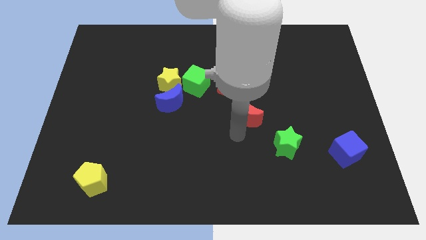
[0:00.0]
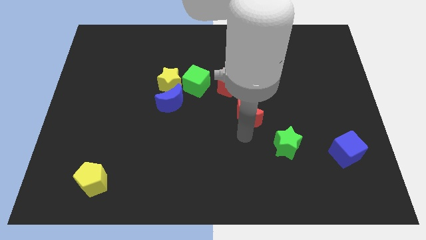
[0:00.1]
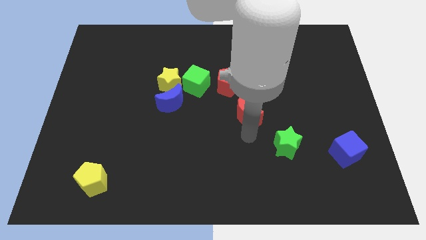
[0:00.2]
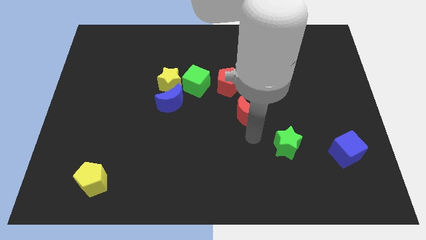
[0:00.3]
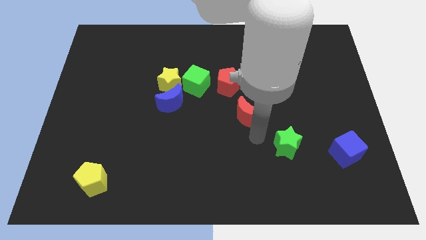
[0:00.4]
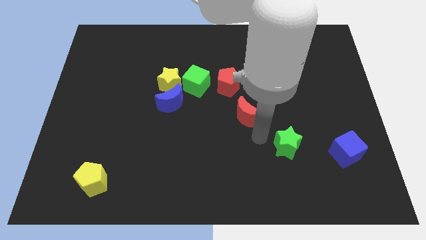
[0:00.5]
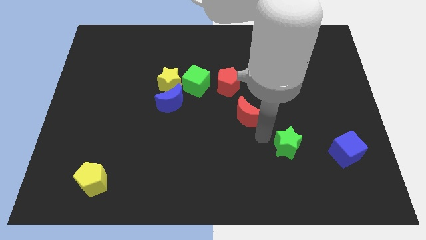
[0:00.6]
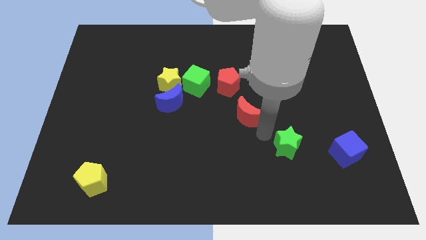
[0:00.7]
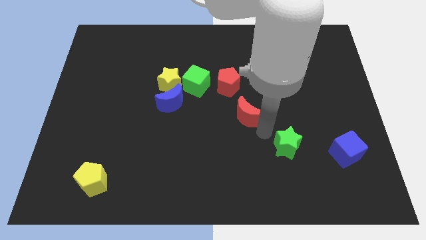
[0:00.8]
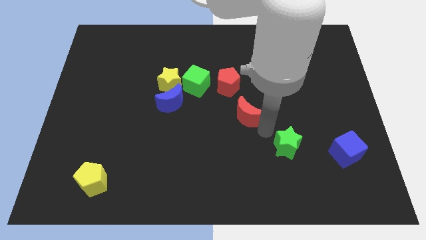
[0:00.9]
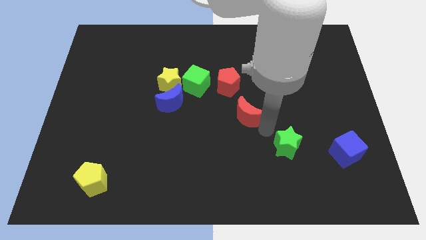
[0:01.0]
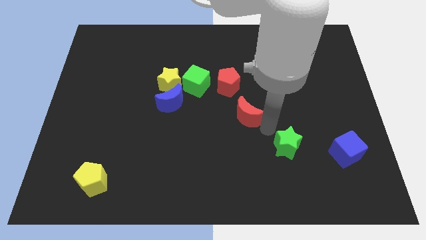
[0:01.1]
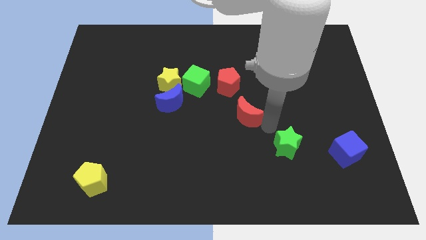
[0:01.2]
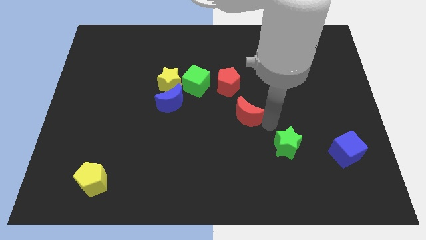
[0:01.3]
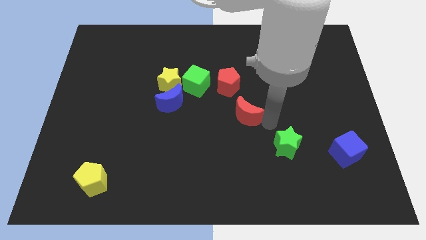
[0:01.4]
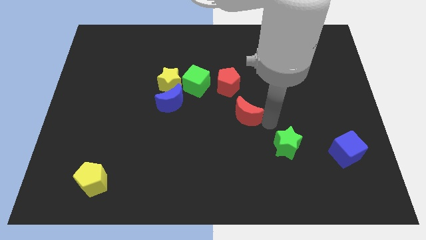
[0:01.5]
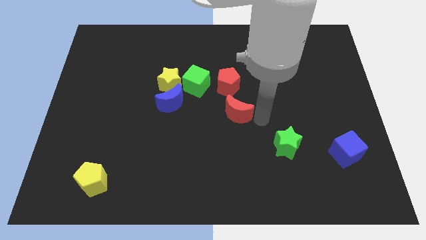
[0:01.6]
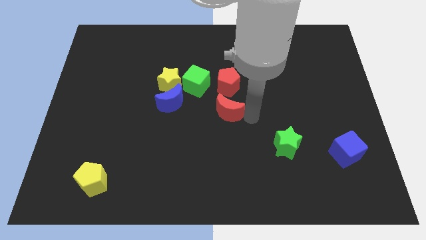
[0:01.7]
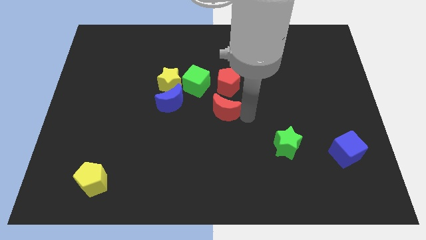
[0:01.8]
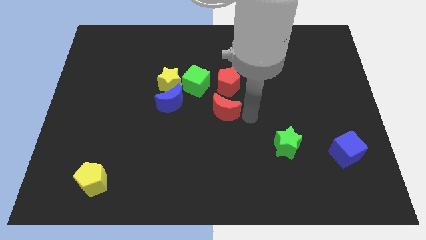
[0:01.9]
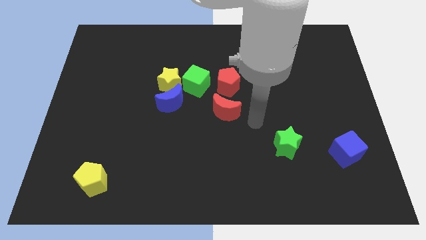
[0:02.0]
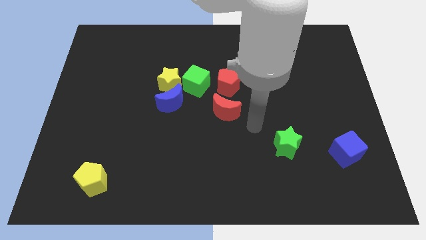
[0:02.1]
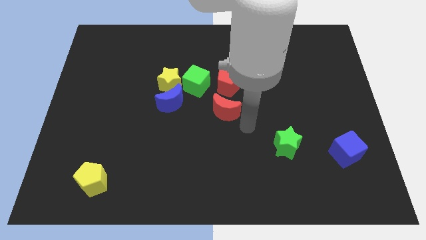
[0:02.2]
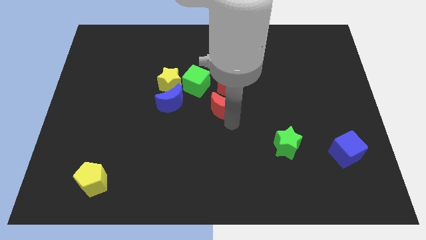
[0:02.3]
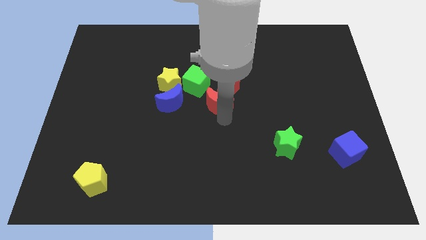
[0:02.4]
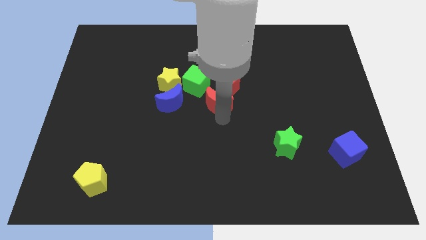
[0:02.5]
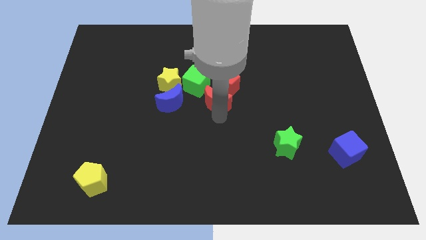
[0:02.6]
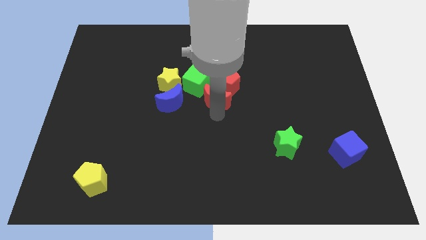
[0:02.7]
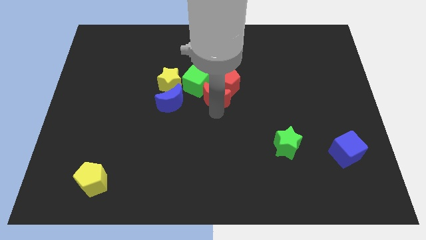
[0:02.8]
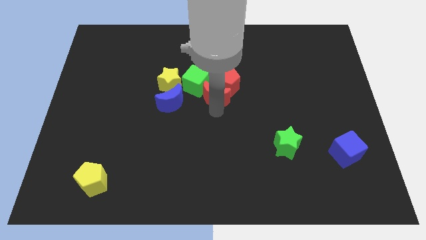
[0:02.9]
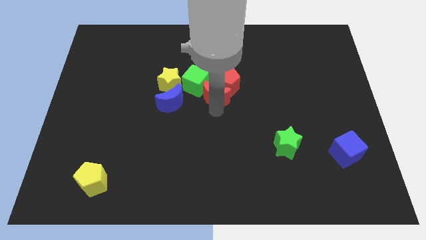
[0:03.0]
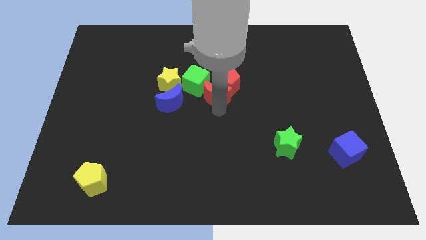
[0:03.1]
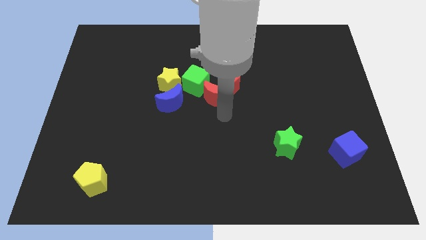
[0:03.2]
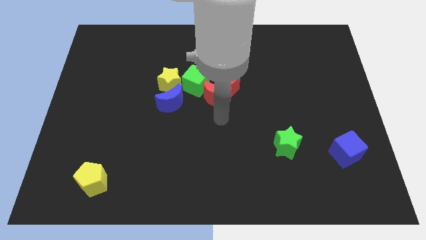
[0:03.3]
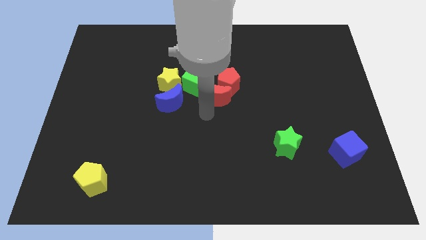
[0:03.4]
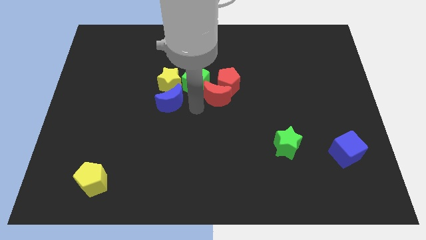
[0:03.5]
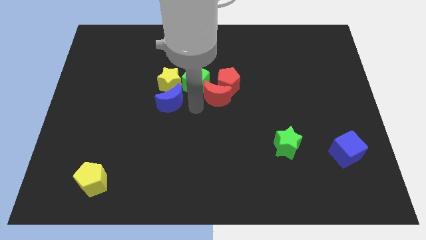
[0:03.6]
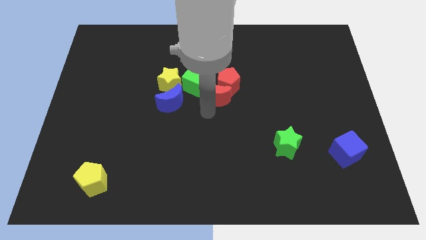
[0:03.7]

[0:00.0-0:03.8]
slide the red moon to the bottom of the red pentagon

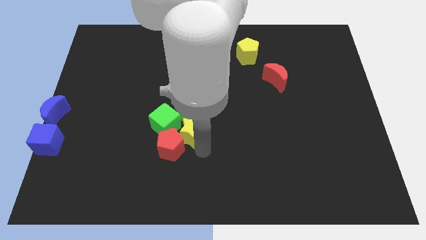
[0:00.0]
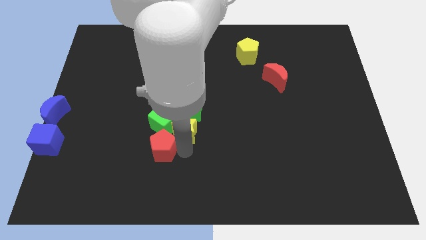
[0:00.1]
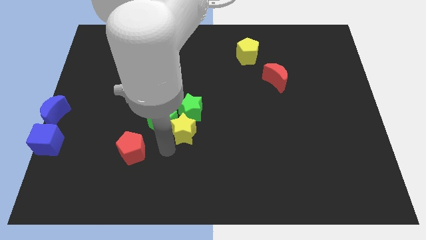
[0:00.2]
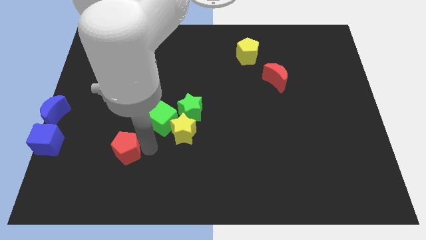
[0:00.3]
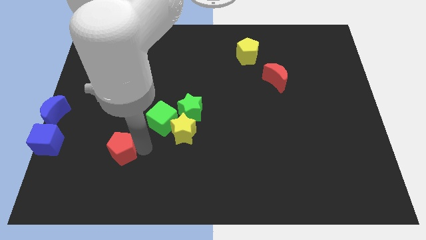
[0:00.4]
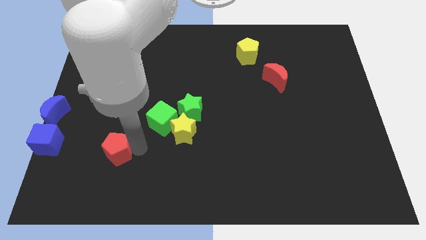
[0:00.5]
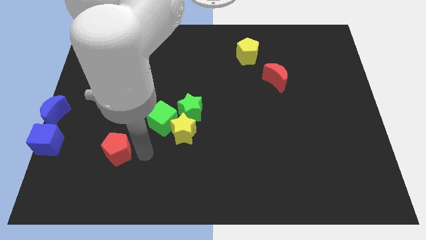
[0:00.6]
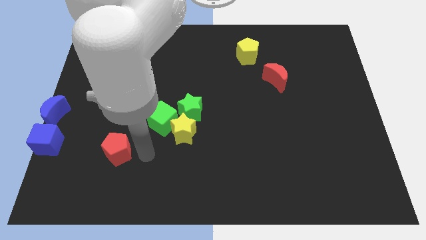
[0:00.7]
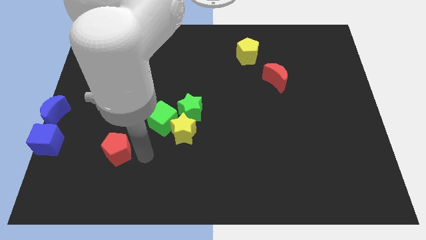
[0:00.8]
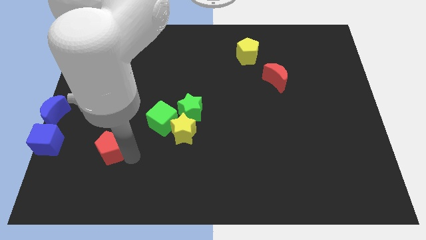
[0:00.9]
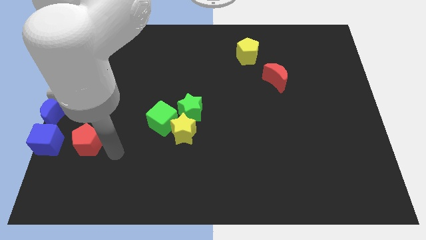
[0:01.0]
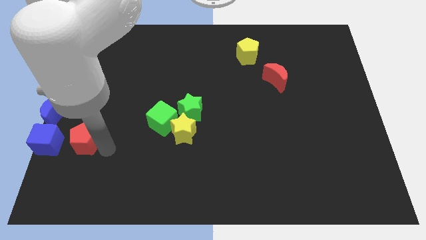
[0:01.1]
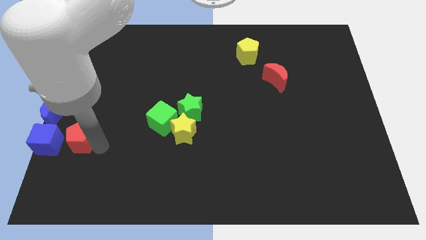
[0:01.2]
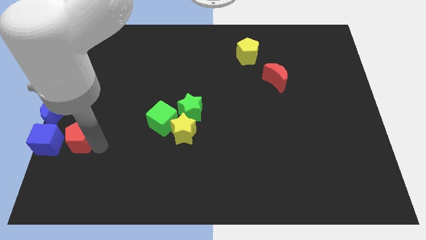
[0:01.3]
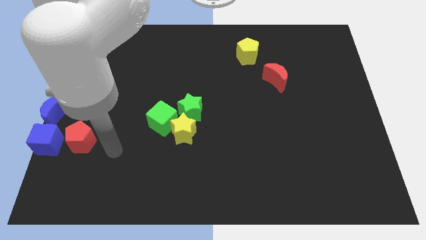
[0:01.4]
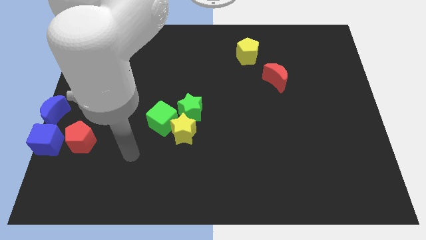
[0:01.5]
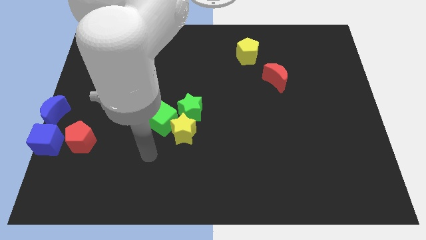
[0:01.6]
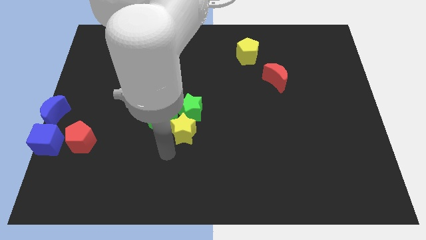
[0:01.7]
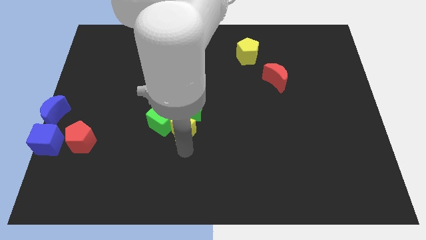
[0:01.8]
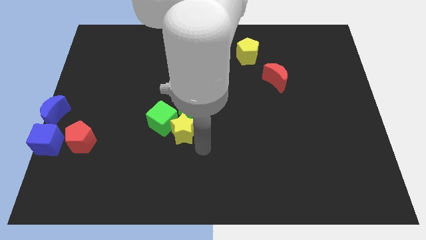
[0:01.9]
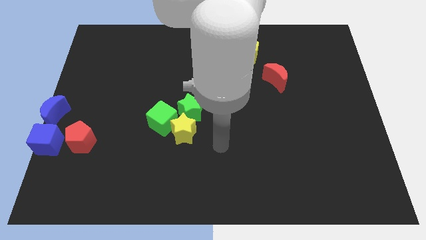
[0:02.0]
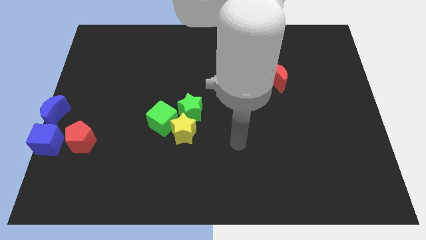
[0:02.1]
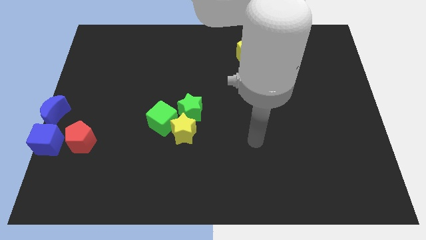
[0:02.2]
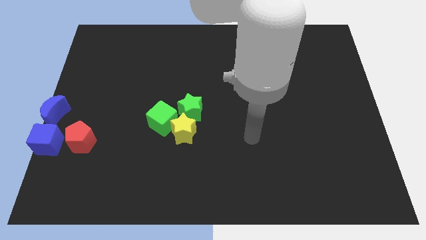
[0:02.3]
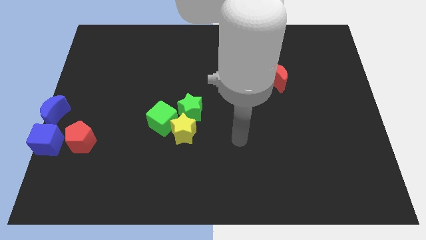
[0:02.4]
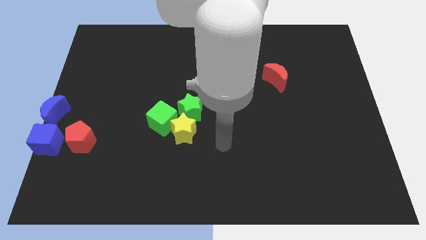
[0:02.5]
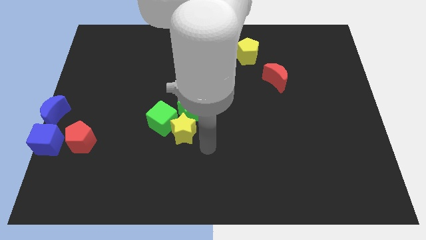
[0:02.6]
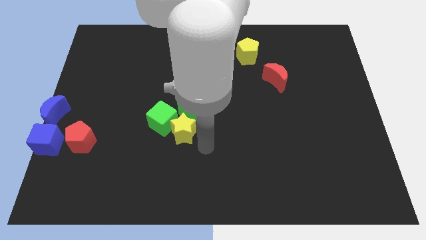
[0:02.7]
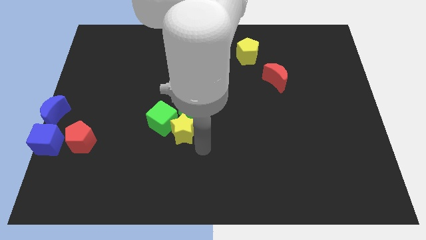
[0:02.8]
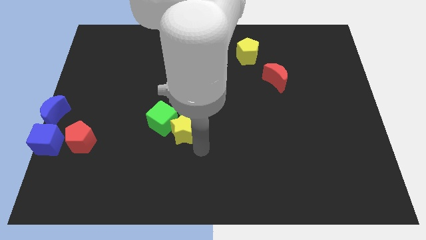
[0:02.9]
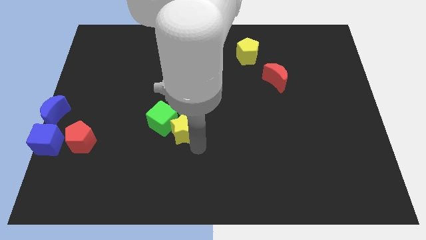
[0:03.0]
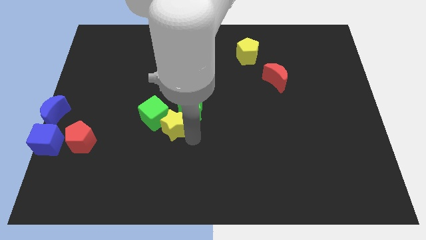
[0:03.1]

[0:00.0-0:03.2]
place the red pentagon right to the blue cube

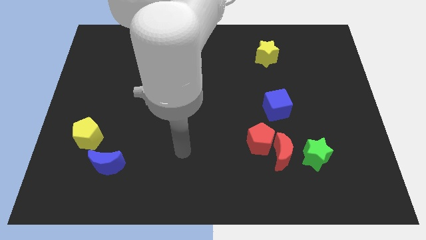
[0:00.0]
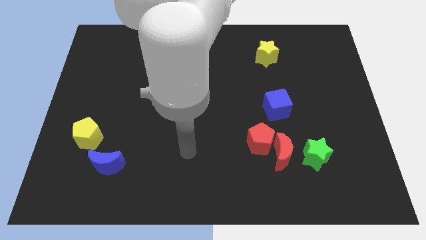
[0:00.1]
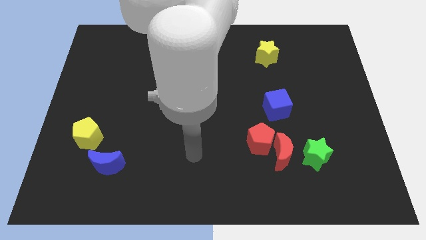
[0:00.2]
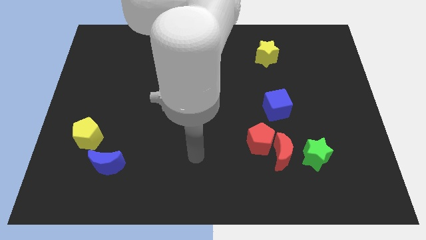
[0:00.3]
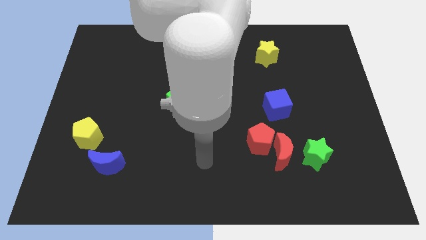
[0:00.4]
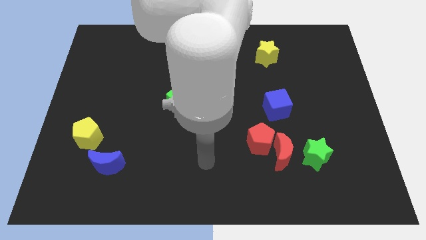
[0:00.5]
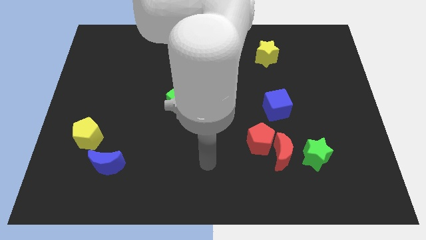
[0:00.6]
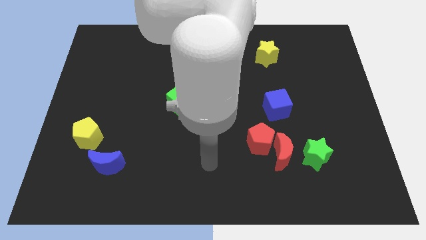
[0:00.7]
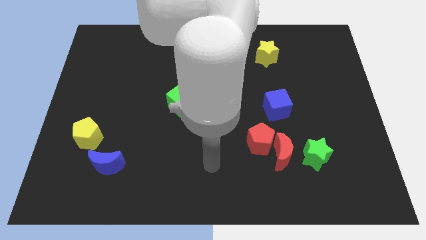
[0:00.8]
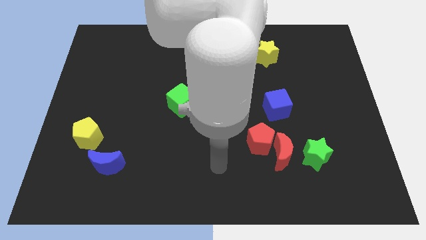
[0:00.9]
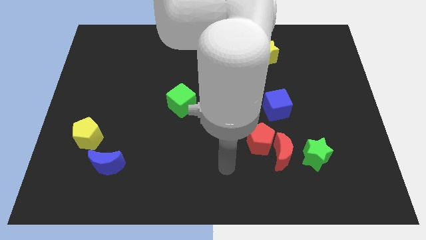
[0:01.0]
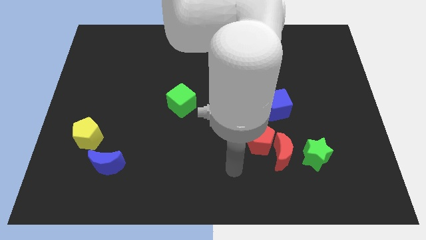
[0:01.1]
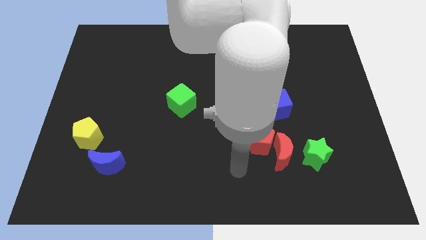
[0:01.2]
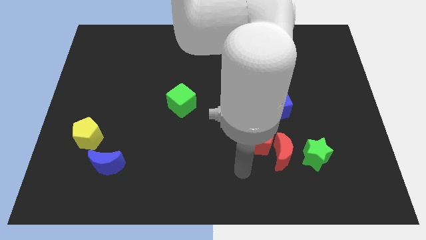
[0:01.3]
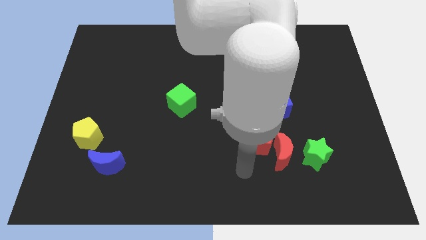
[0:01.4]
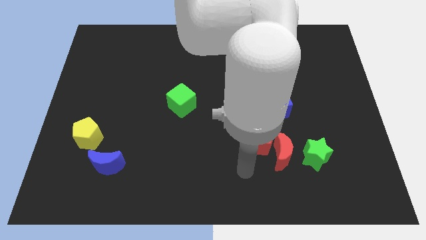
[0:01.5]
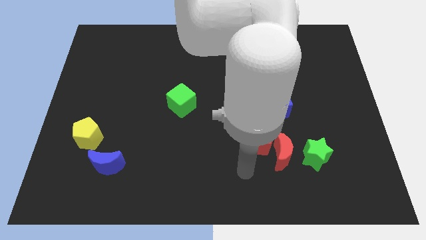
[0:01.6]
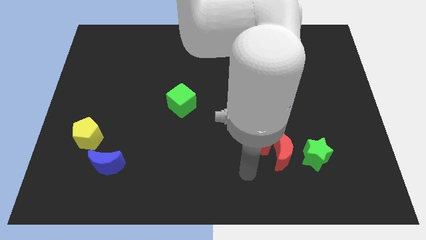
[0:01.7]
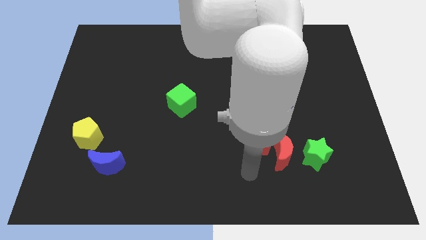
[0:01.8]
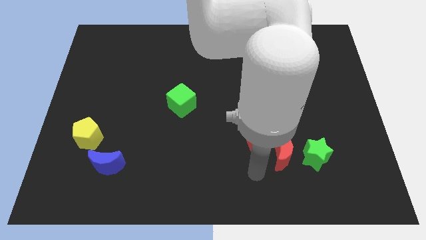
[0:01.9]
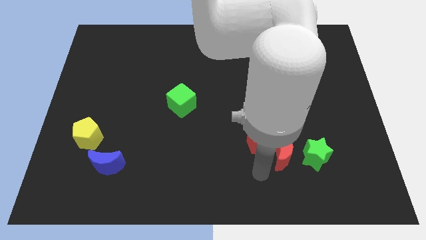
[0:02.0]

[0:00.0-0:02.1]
move the arm to the bottom of the red pentagon
